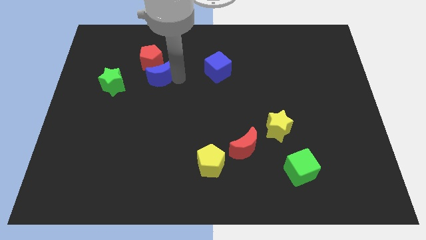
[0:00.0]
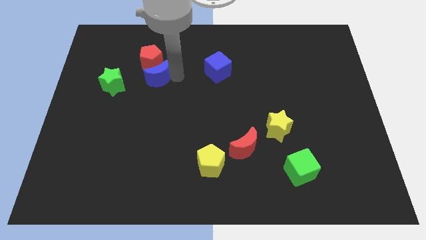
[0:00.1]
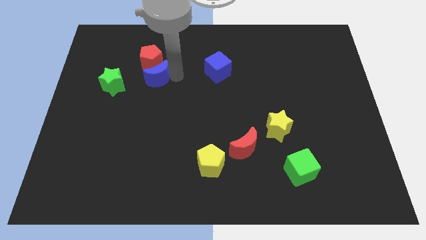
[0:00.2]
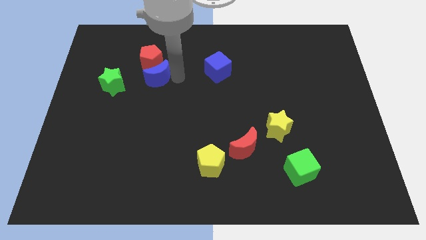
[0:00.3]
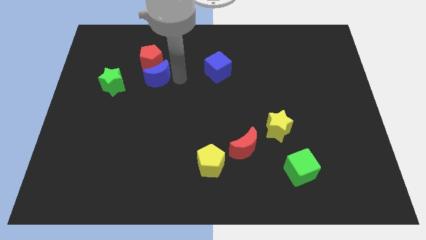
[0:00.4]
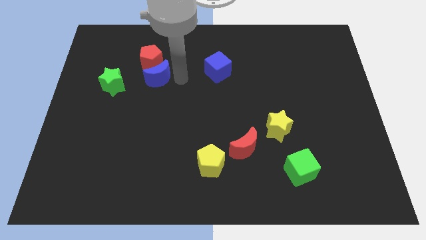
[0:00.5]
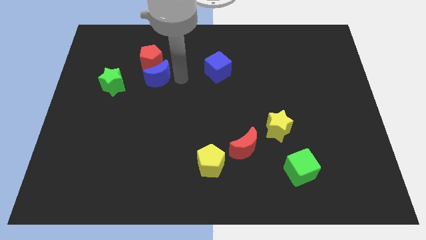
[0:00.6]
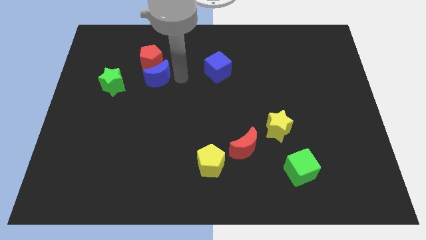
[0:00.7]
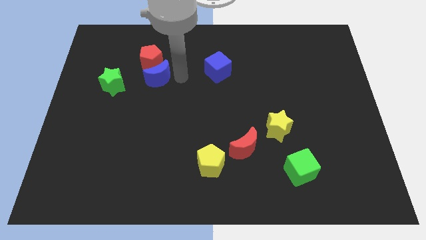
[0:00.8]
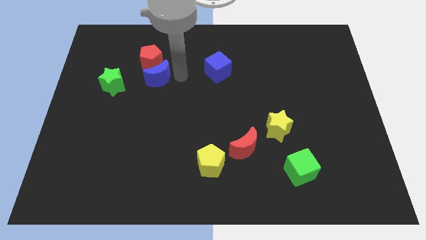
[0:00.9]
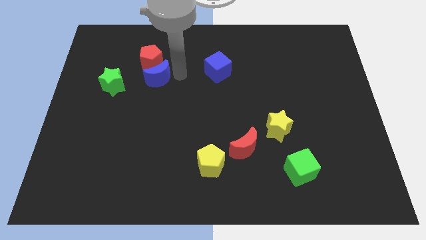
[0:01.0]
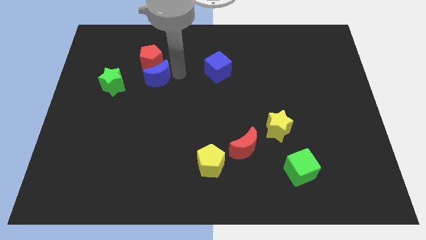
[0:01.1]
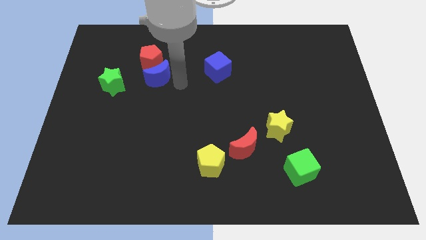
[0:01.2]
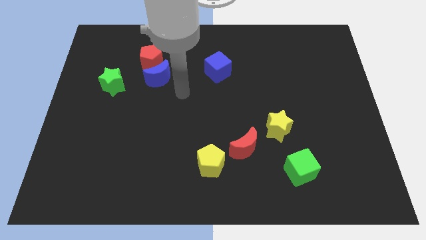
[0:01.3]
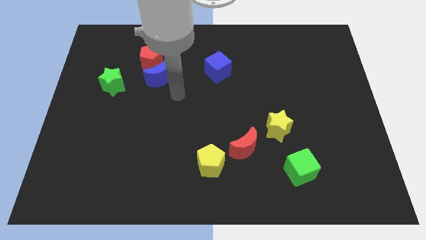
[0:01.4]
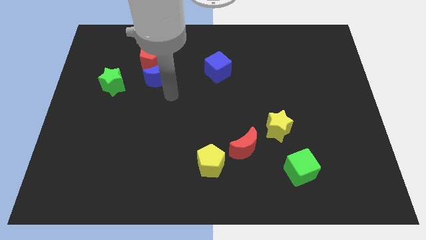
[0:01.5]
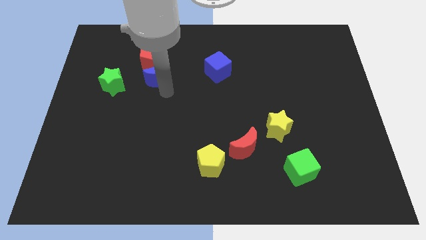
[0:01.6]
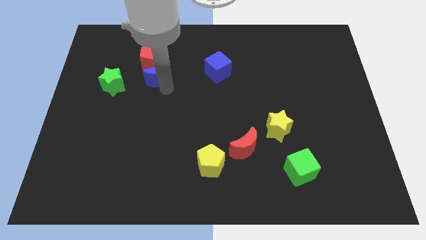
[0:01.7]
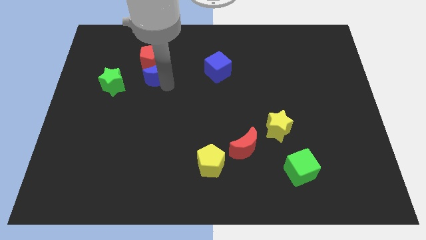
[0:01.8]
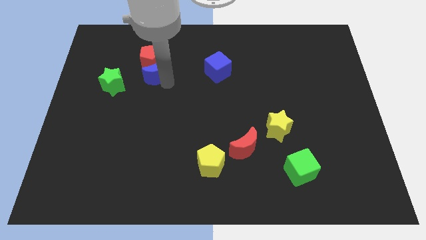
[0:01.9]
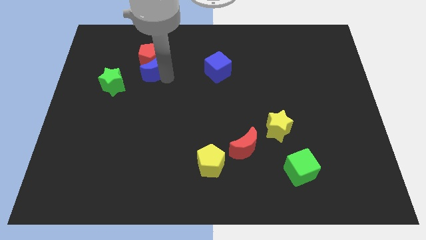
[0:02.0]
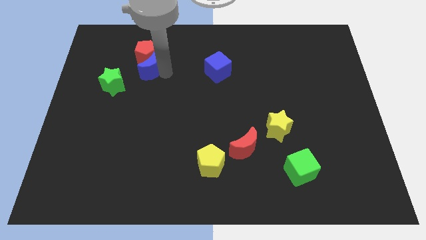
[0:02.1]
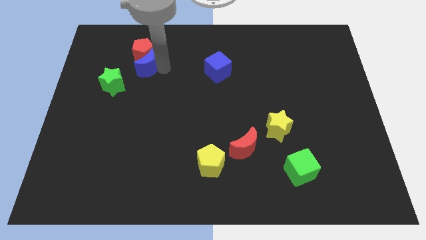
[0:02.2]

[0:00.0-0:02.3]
push the blue semi circle into the red pentagon

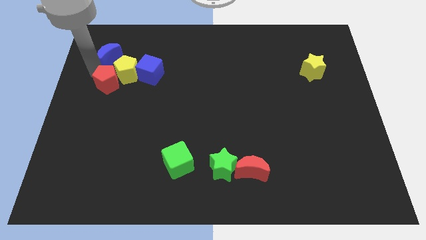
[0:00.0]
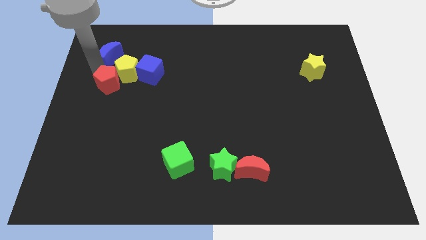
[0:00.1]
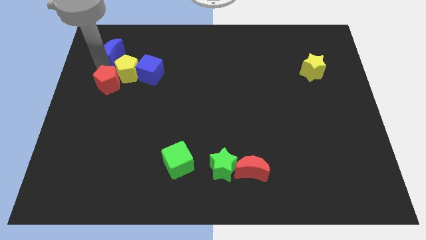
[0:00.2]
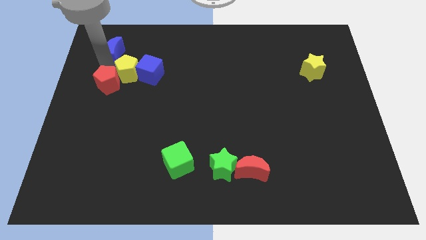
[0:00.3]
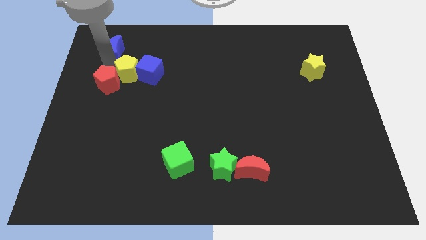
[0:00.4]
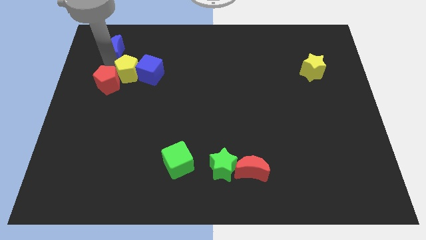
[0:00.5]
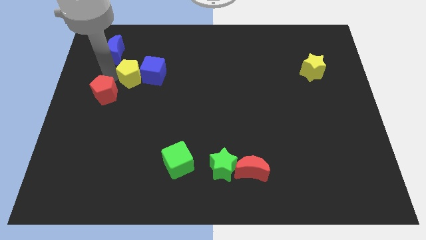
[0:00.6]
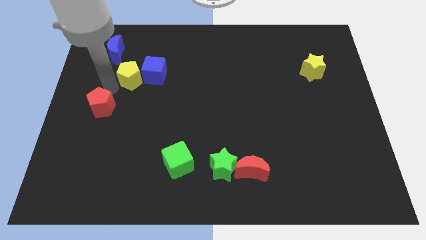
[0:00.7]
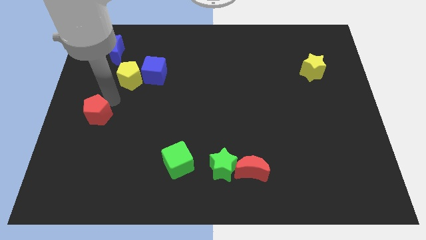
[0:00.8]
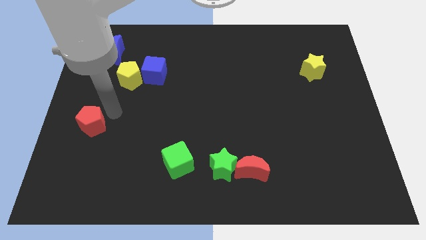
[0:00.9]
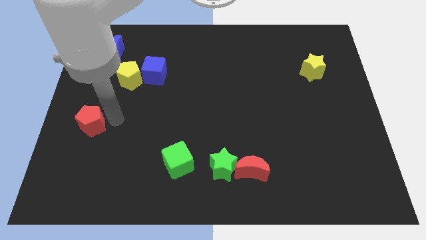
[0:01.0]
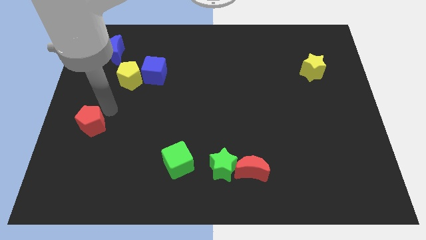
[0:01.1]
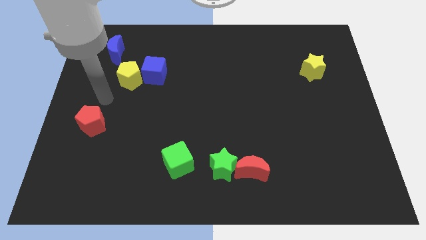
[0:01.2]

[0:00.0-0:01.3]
separate the red pentagon from the yellow pentagon

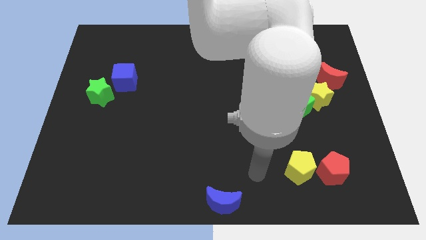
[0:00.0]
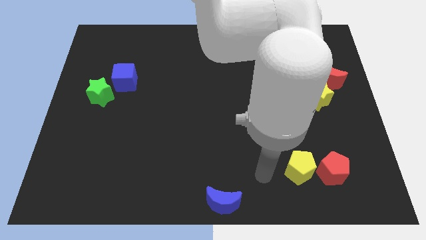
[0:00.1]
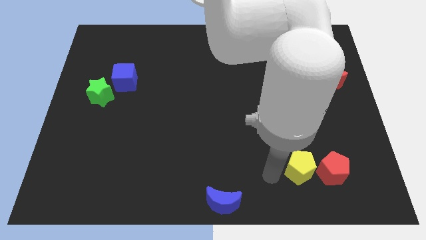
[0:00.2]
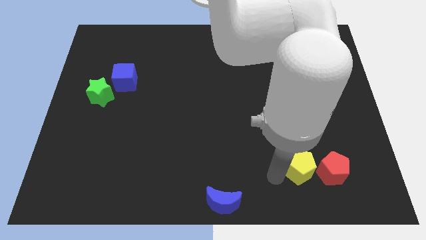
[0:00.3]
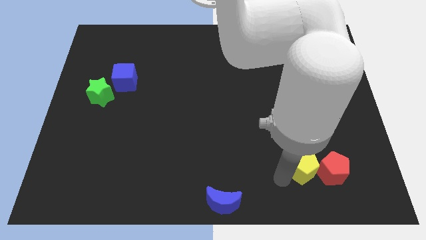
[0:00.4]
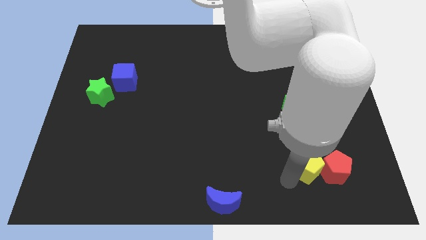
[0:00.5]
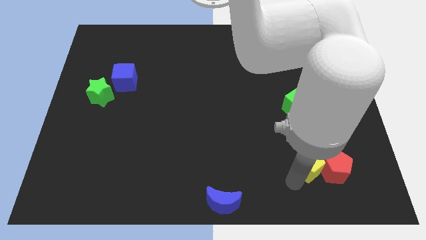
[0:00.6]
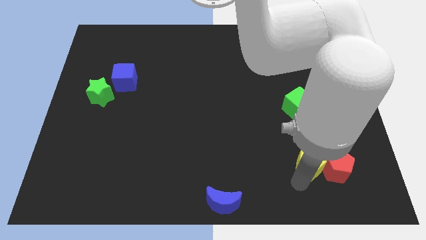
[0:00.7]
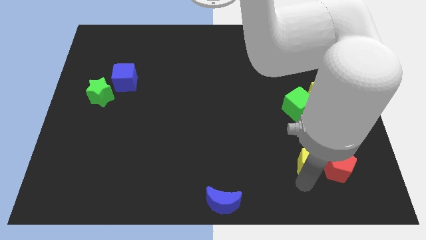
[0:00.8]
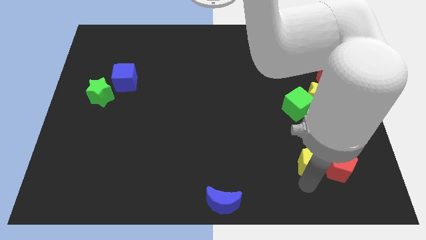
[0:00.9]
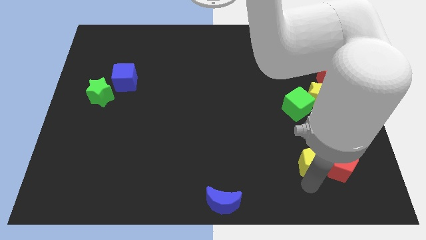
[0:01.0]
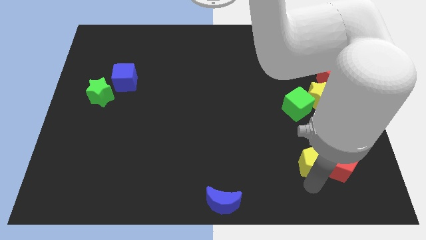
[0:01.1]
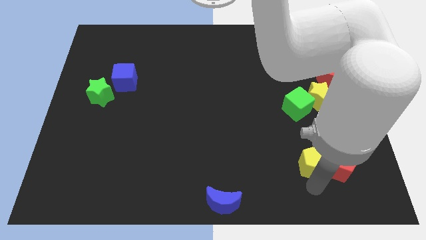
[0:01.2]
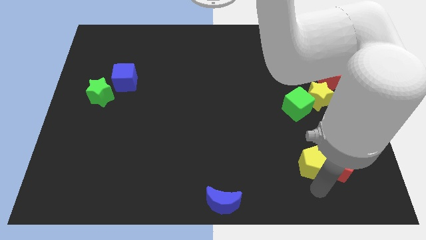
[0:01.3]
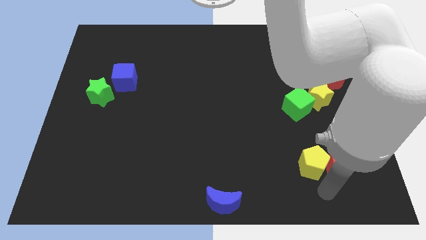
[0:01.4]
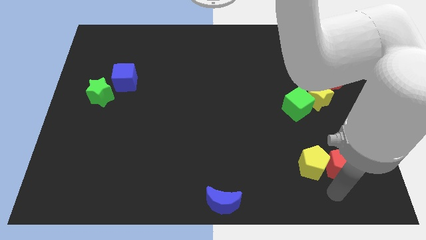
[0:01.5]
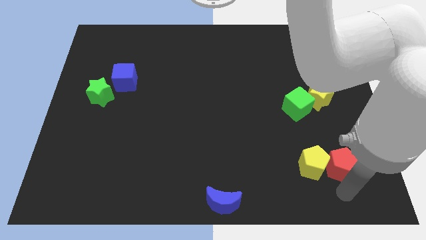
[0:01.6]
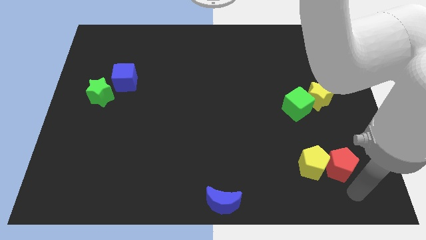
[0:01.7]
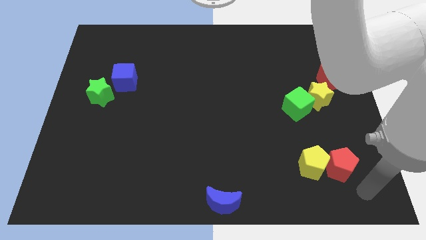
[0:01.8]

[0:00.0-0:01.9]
push the yellow pentagon into red pentagon

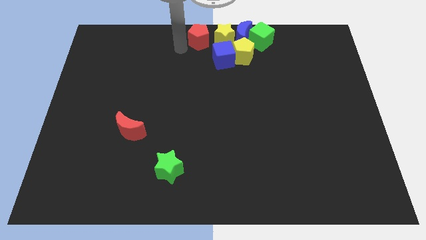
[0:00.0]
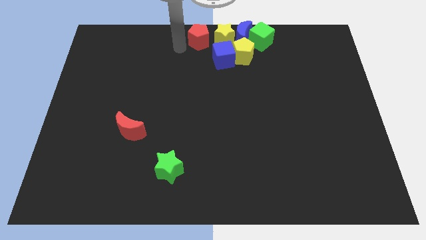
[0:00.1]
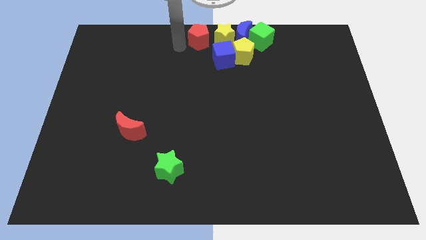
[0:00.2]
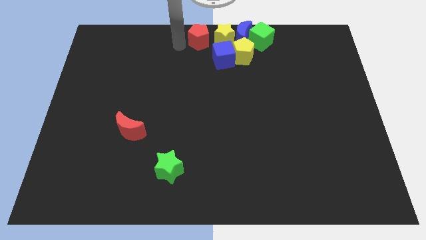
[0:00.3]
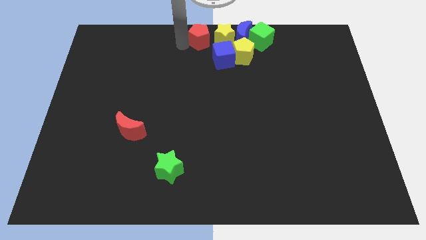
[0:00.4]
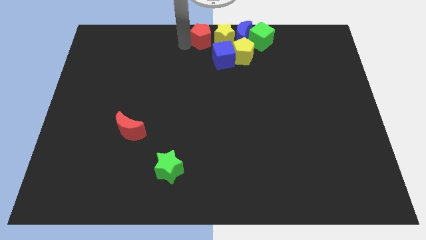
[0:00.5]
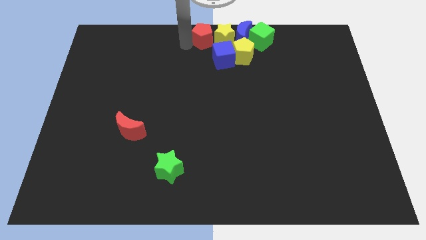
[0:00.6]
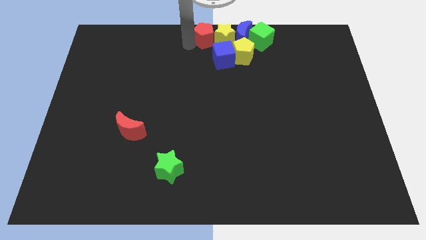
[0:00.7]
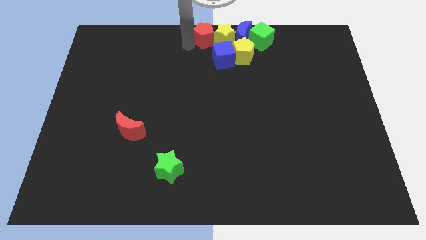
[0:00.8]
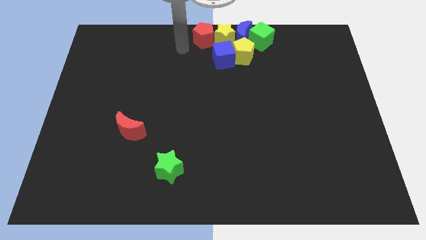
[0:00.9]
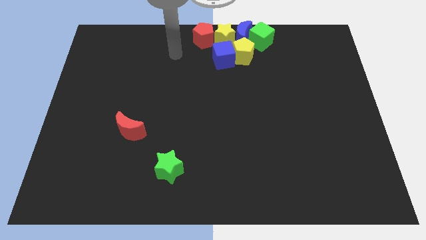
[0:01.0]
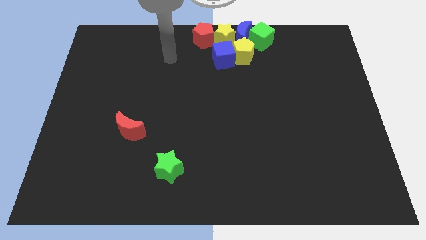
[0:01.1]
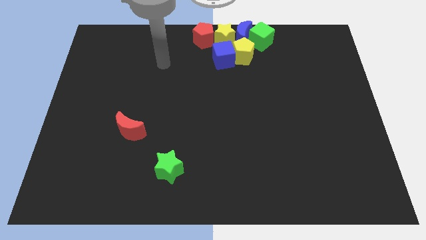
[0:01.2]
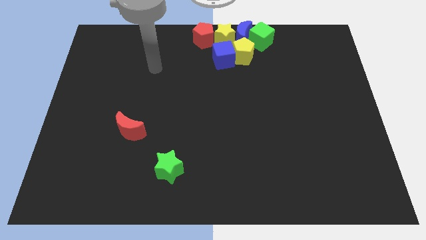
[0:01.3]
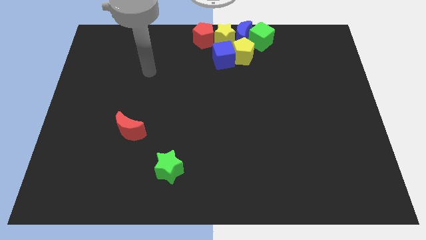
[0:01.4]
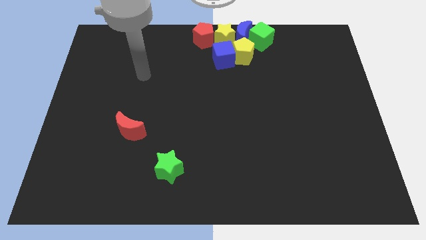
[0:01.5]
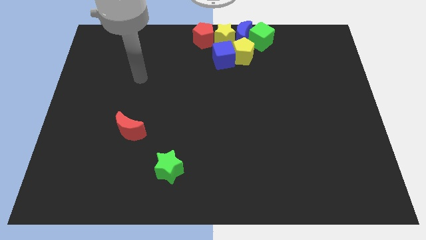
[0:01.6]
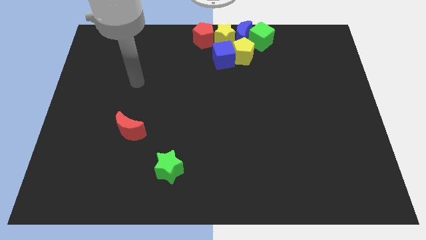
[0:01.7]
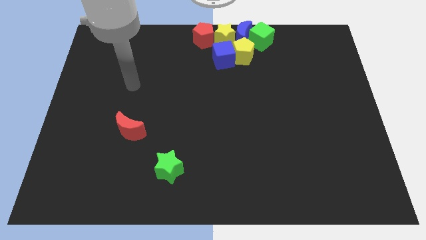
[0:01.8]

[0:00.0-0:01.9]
push the red pentagon into the yellow star

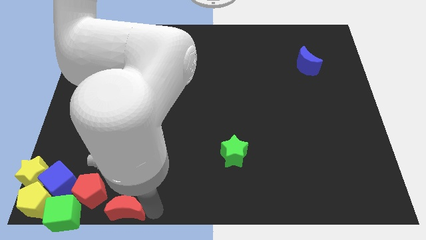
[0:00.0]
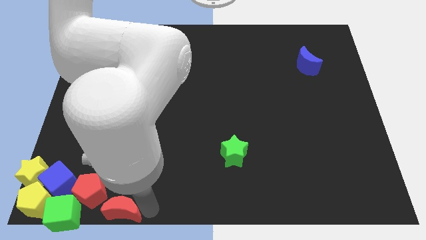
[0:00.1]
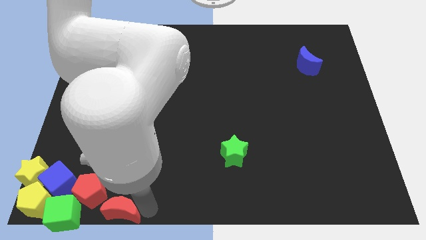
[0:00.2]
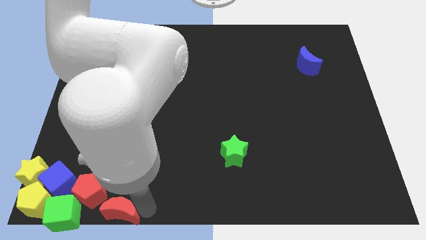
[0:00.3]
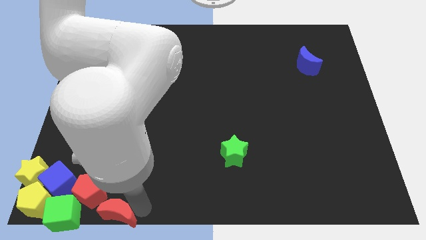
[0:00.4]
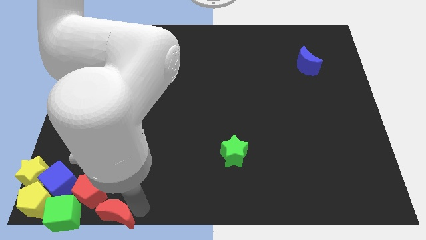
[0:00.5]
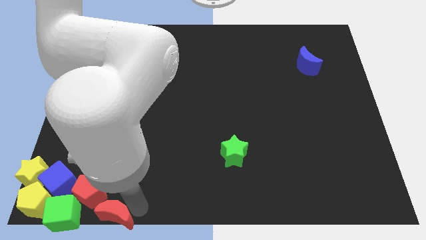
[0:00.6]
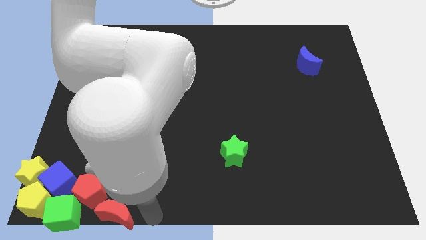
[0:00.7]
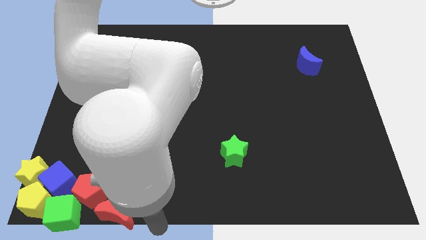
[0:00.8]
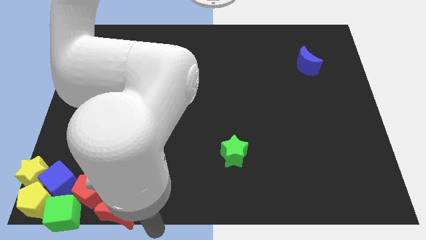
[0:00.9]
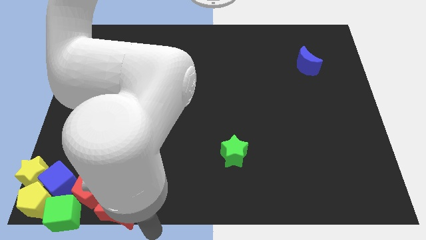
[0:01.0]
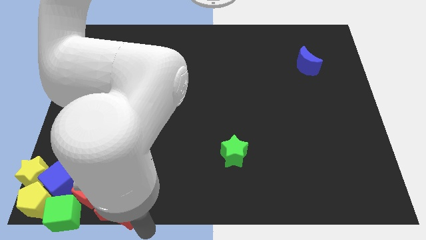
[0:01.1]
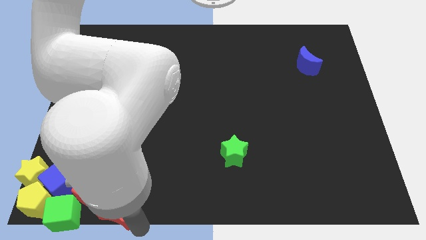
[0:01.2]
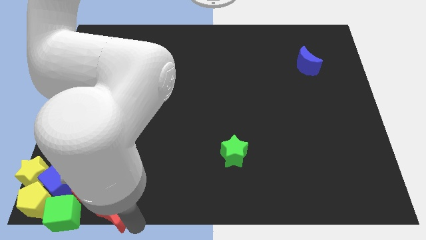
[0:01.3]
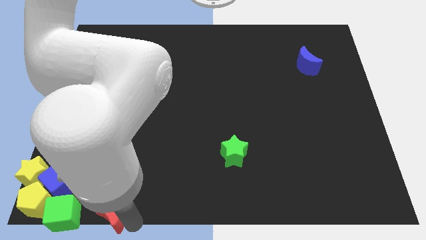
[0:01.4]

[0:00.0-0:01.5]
move the red crescent to the bottom of the red pentagon
